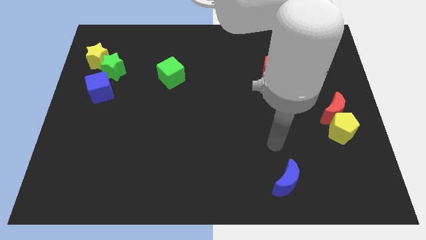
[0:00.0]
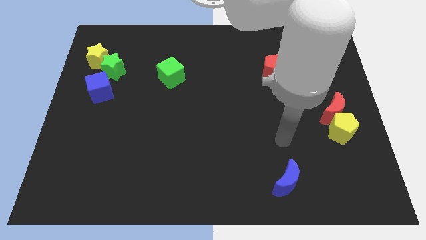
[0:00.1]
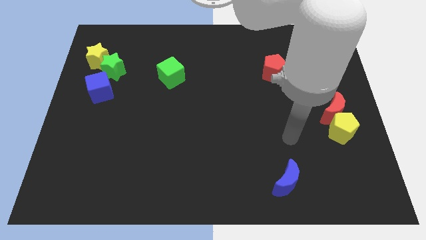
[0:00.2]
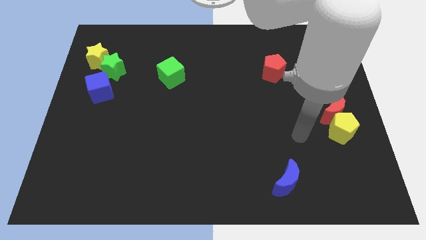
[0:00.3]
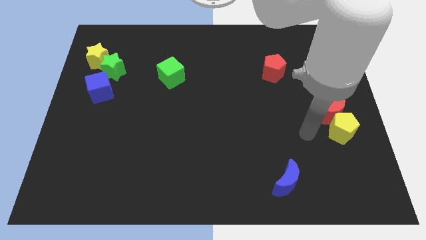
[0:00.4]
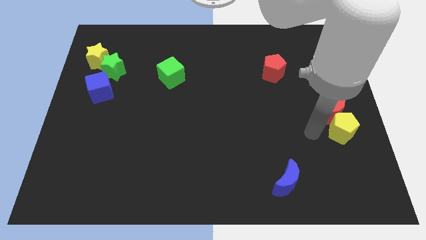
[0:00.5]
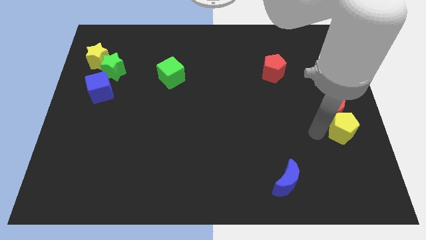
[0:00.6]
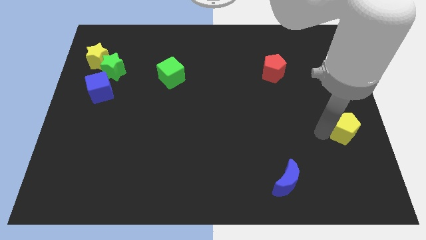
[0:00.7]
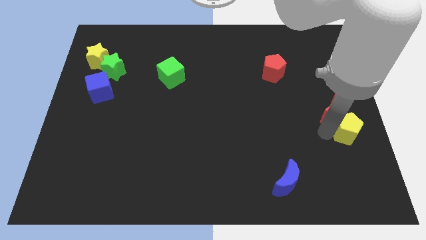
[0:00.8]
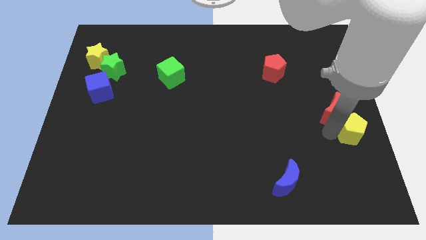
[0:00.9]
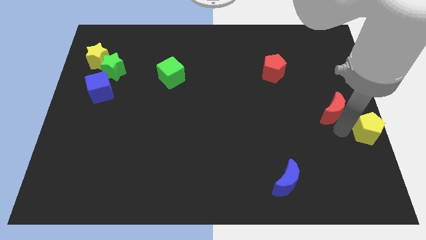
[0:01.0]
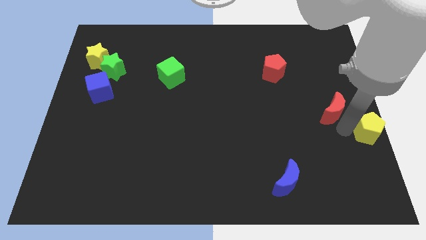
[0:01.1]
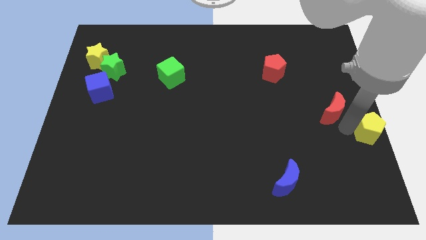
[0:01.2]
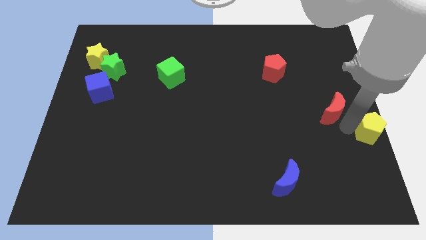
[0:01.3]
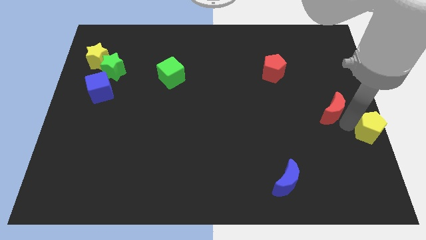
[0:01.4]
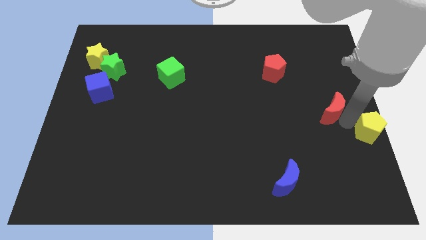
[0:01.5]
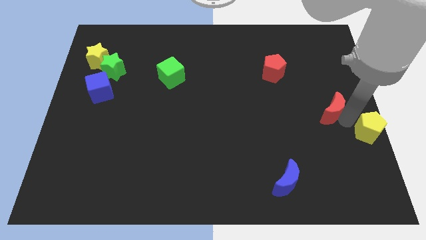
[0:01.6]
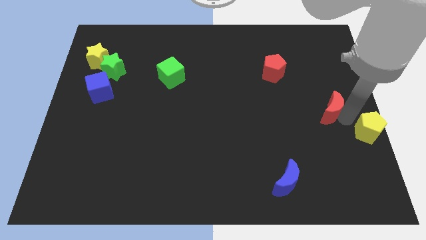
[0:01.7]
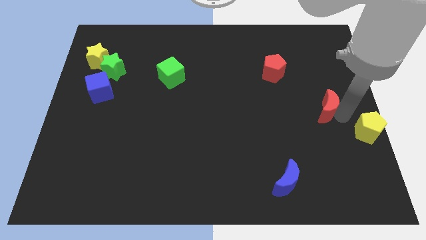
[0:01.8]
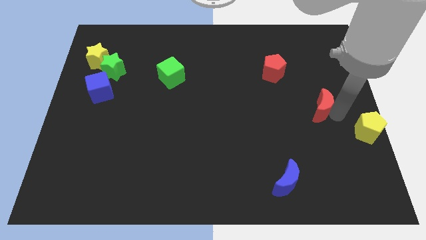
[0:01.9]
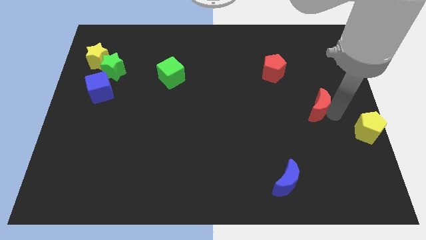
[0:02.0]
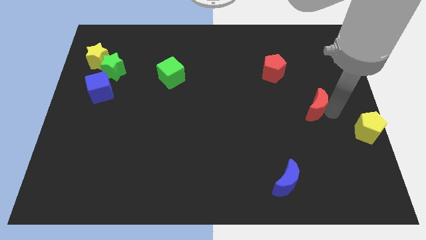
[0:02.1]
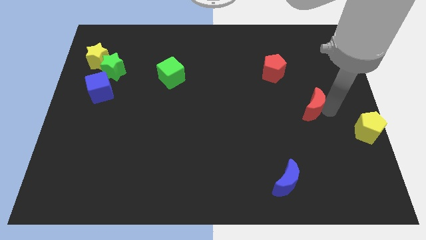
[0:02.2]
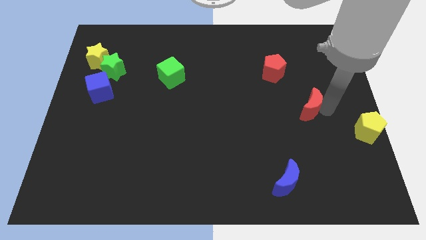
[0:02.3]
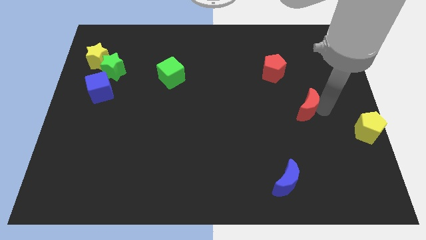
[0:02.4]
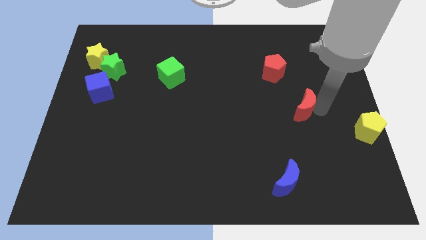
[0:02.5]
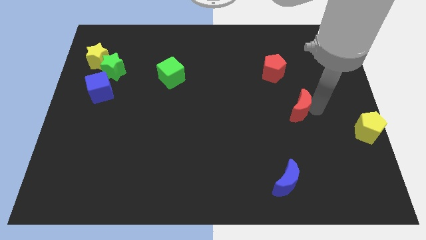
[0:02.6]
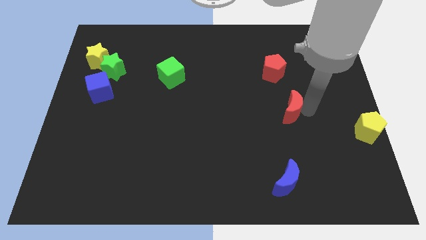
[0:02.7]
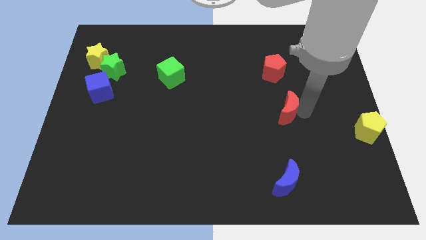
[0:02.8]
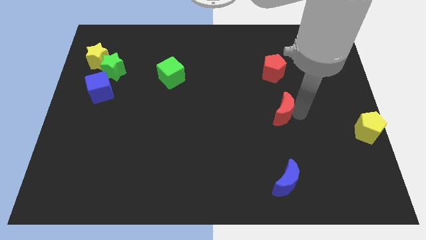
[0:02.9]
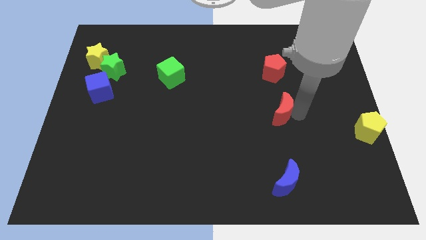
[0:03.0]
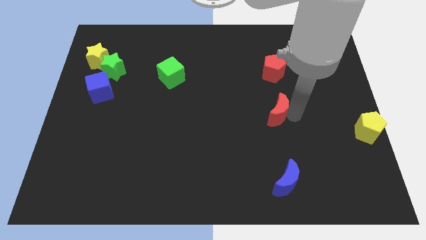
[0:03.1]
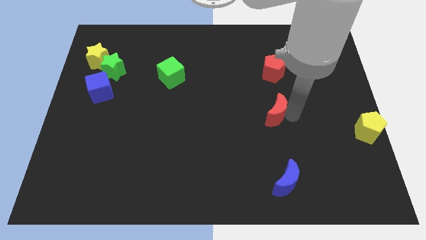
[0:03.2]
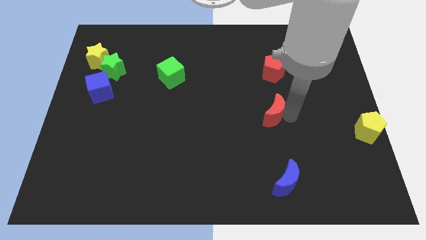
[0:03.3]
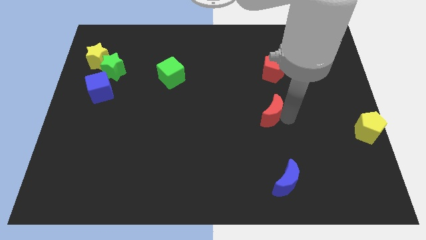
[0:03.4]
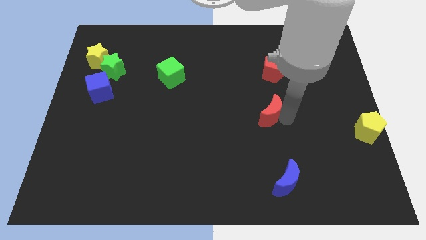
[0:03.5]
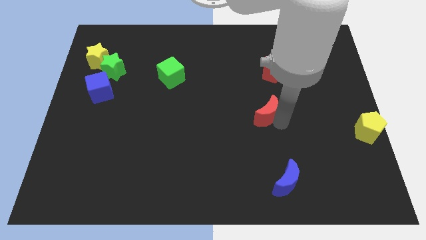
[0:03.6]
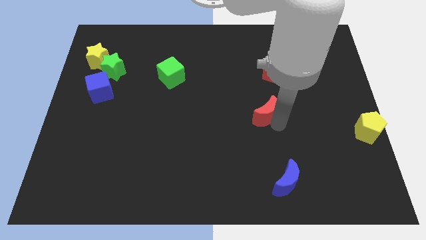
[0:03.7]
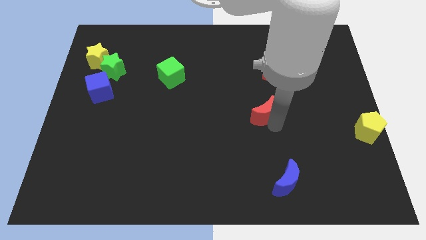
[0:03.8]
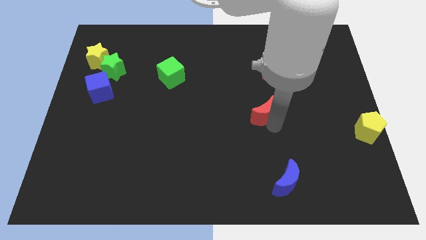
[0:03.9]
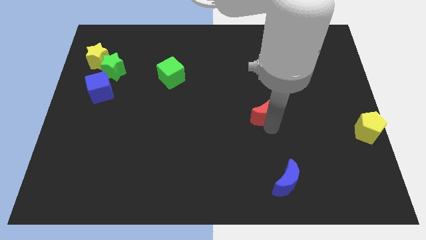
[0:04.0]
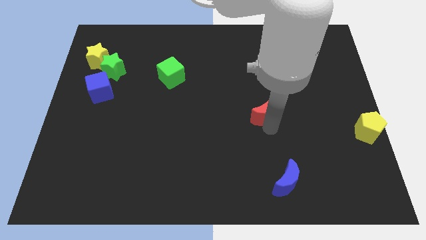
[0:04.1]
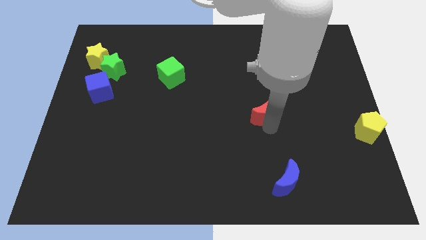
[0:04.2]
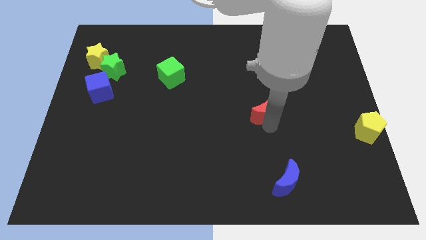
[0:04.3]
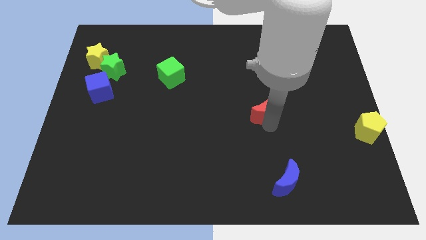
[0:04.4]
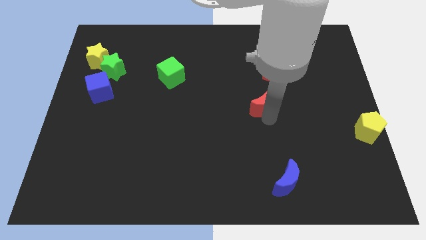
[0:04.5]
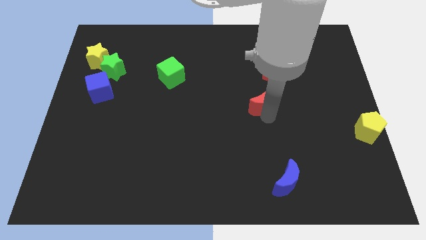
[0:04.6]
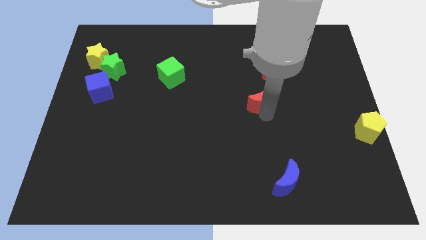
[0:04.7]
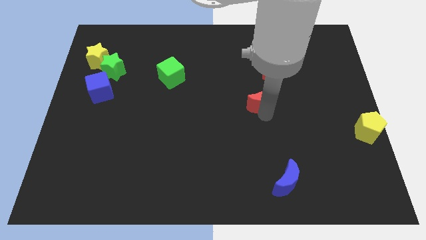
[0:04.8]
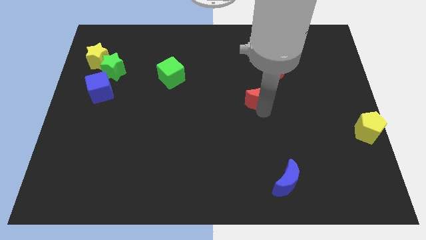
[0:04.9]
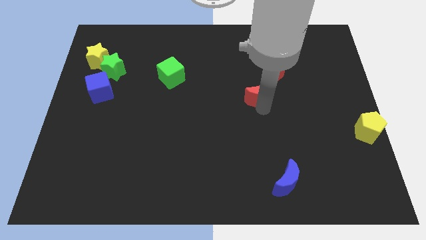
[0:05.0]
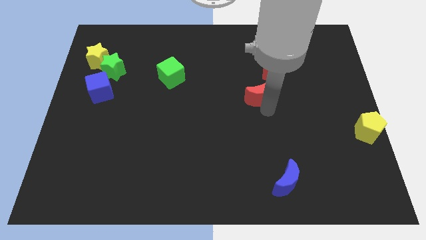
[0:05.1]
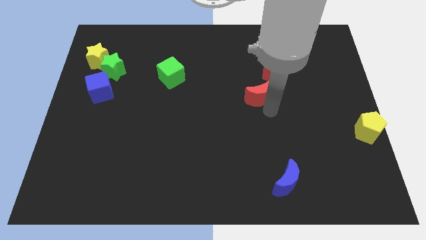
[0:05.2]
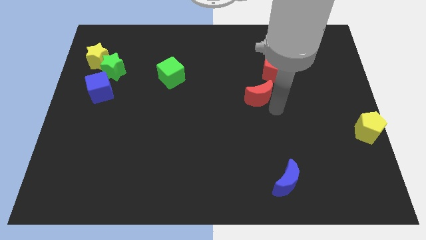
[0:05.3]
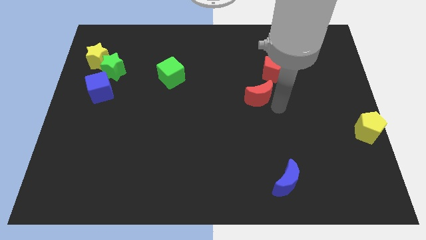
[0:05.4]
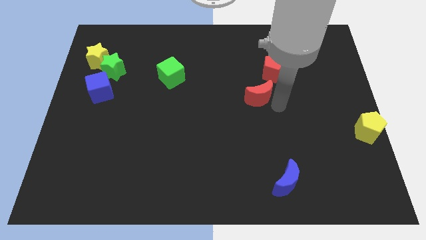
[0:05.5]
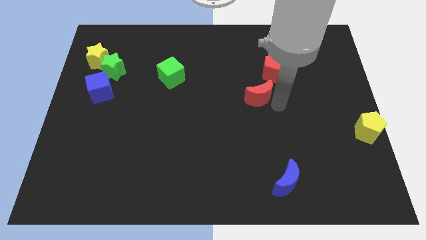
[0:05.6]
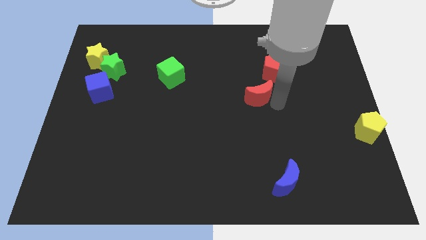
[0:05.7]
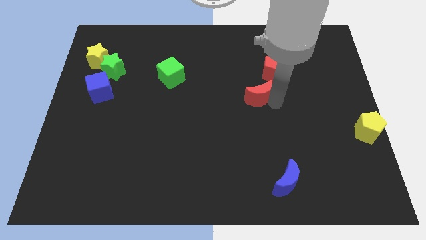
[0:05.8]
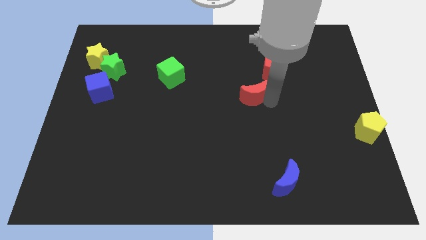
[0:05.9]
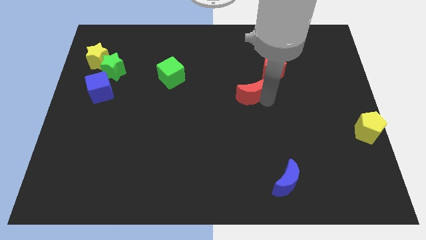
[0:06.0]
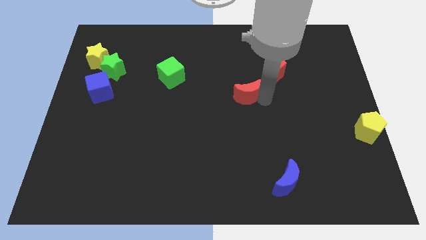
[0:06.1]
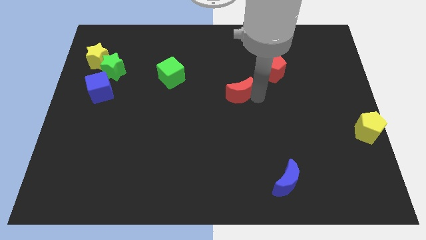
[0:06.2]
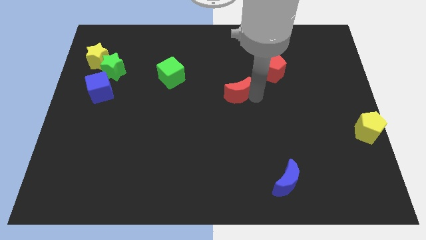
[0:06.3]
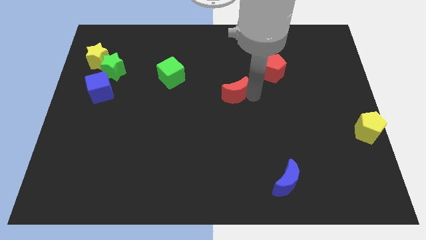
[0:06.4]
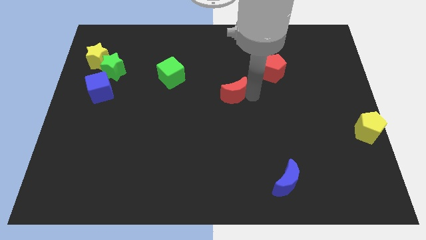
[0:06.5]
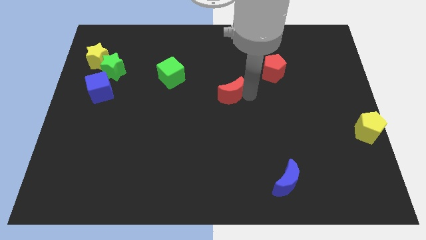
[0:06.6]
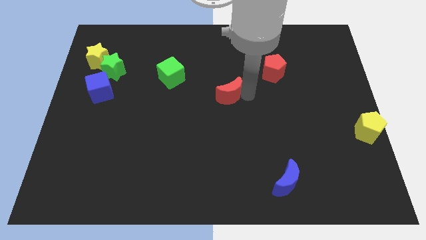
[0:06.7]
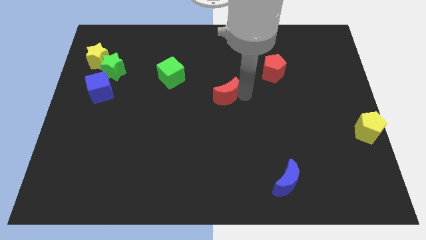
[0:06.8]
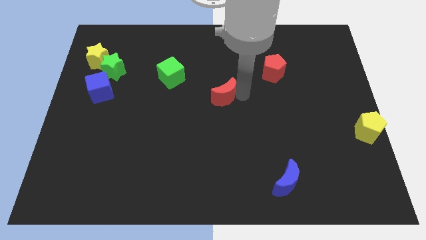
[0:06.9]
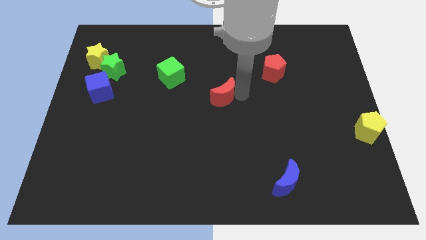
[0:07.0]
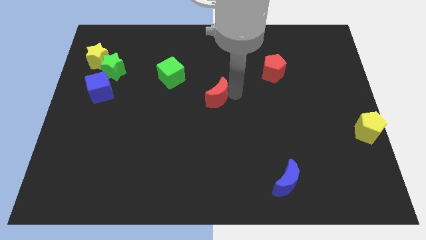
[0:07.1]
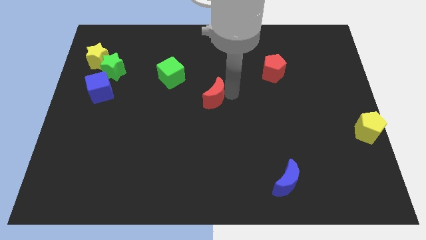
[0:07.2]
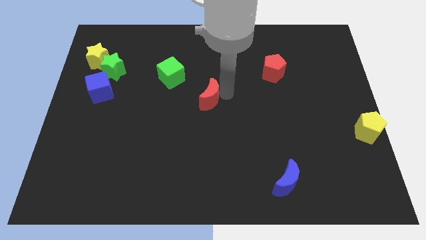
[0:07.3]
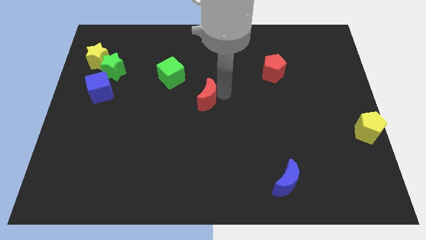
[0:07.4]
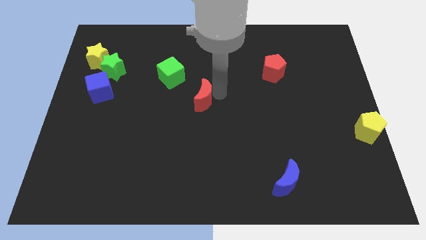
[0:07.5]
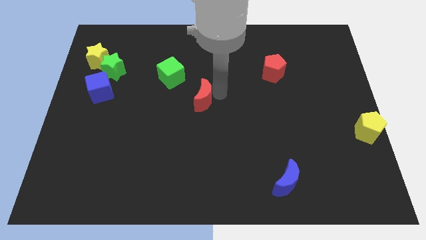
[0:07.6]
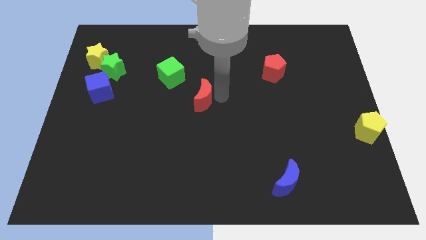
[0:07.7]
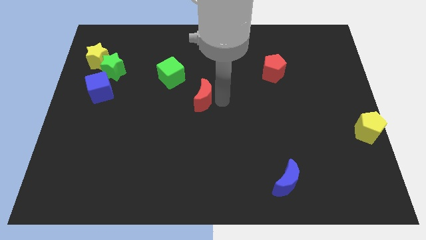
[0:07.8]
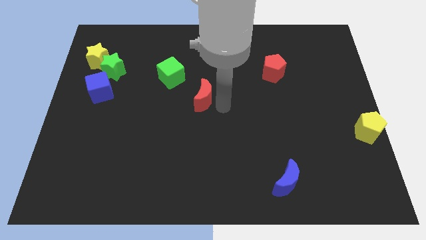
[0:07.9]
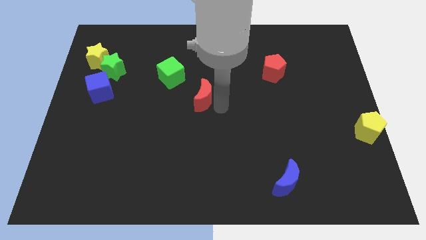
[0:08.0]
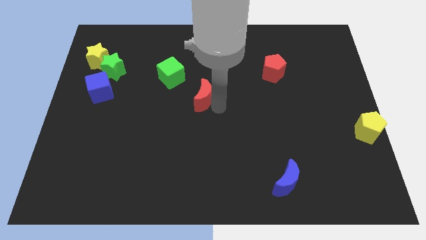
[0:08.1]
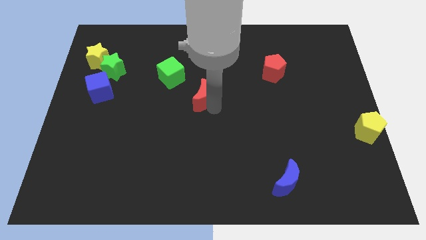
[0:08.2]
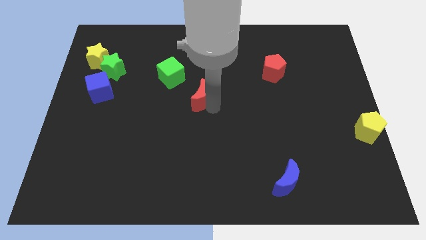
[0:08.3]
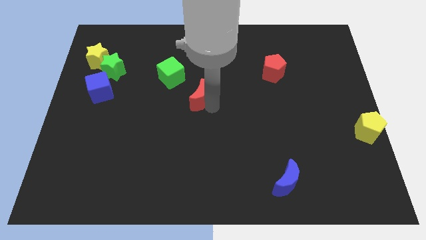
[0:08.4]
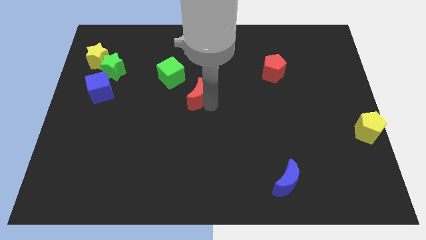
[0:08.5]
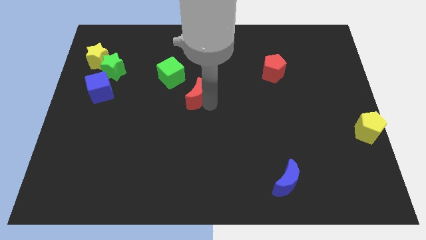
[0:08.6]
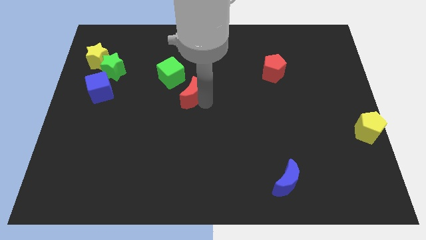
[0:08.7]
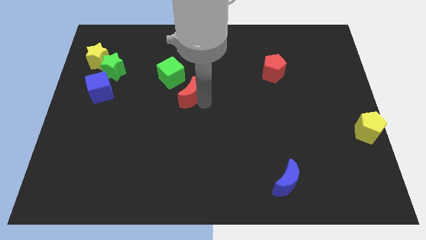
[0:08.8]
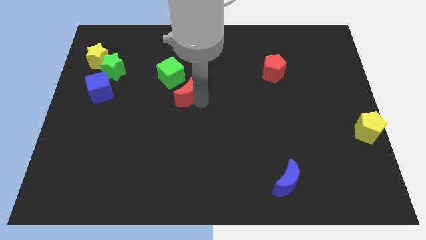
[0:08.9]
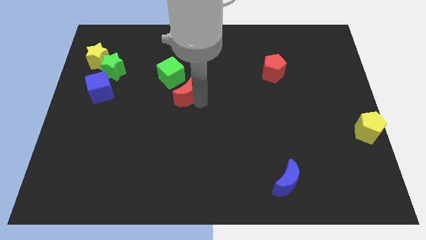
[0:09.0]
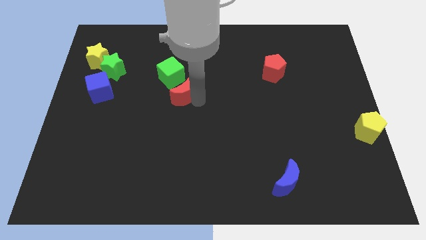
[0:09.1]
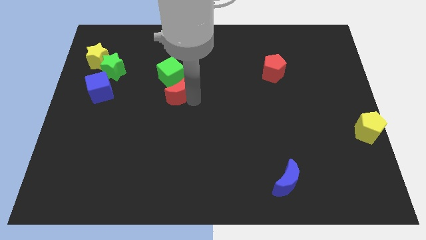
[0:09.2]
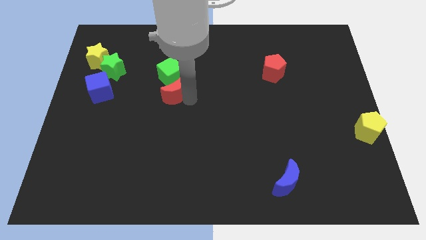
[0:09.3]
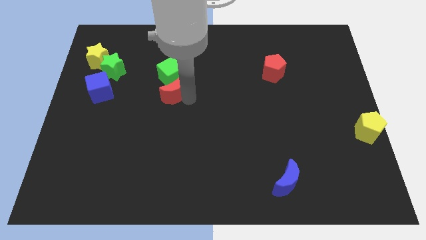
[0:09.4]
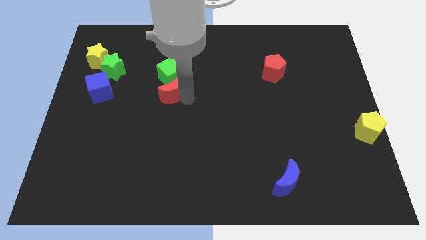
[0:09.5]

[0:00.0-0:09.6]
move the red moon close to the green cube
